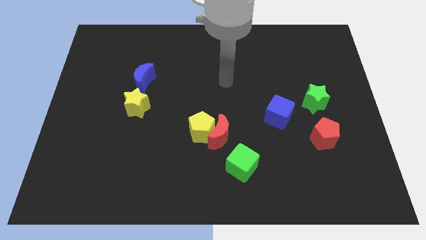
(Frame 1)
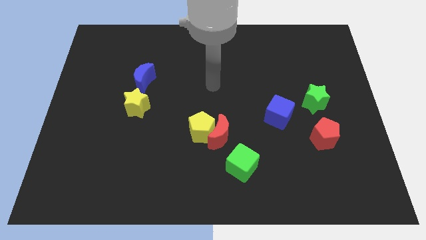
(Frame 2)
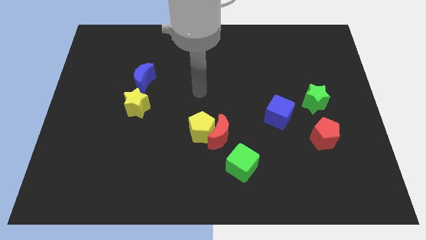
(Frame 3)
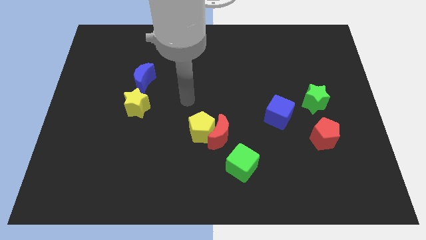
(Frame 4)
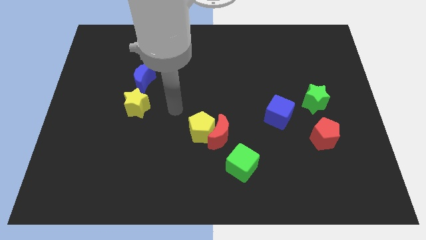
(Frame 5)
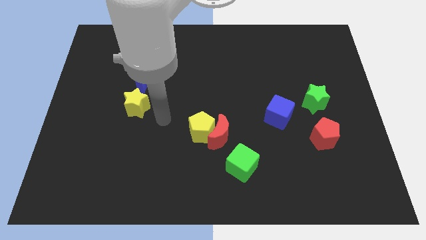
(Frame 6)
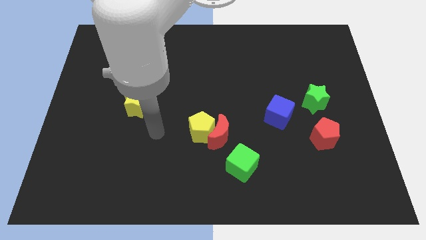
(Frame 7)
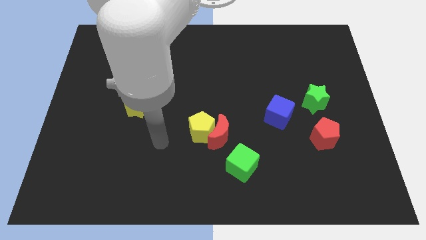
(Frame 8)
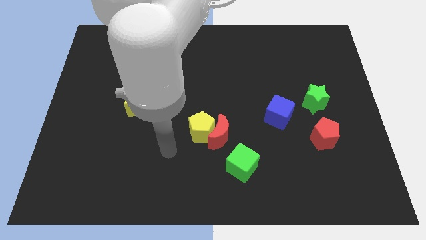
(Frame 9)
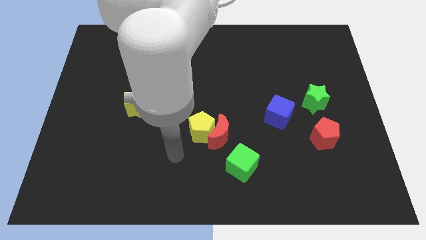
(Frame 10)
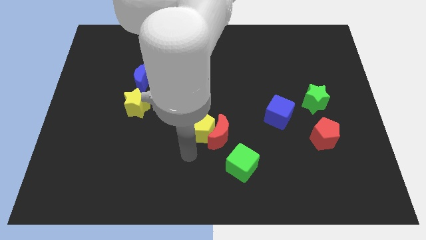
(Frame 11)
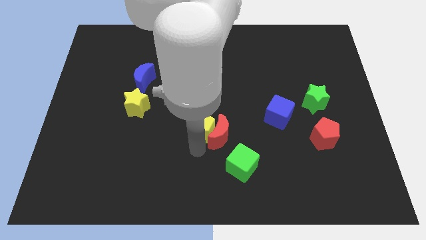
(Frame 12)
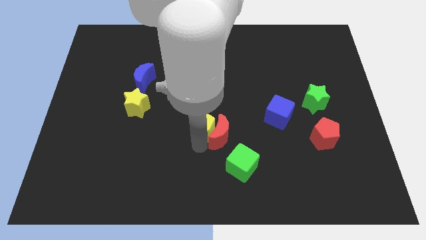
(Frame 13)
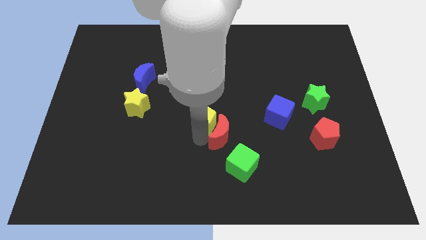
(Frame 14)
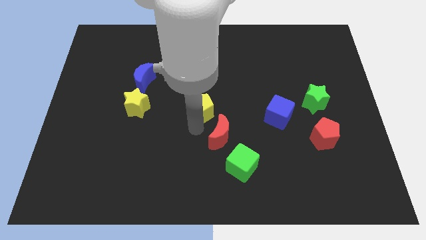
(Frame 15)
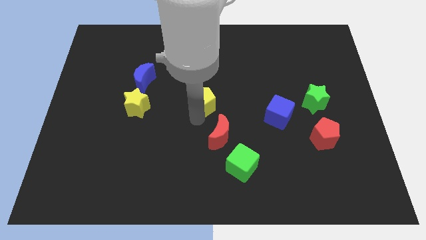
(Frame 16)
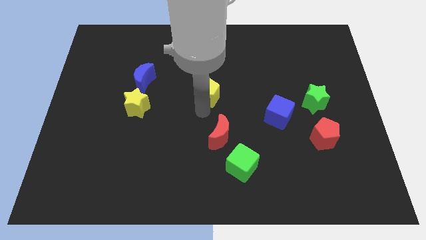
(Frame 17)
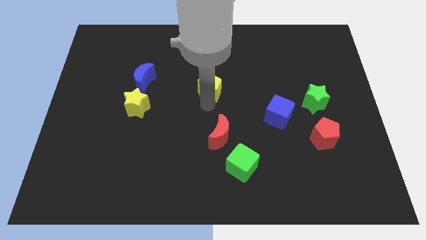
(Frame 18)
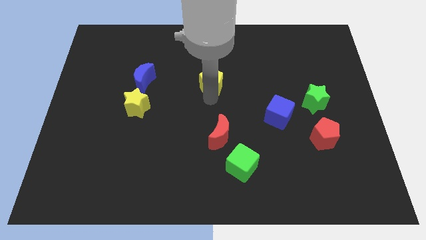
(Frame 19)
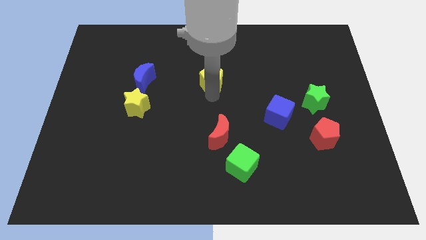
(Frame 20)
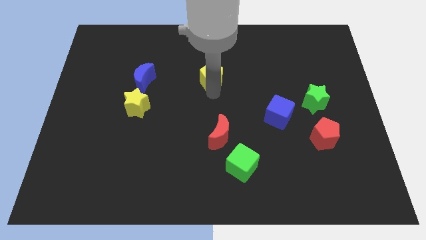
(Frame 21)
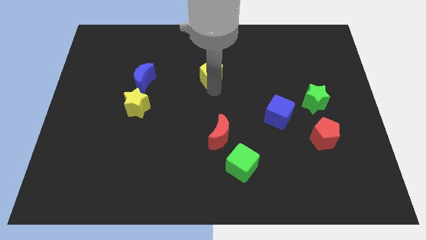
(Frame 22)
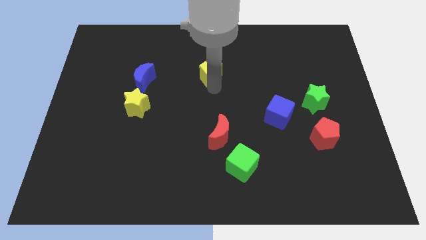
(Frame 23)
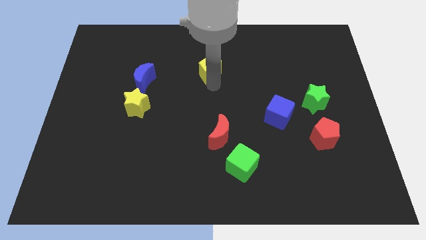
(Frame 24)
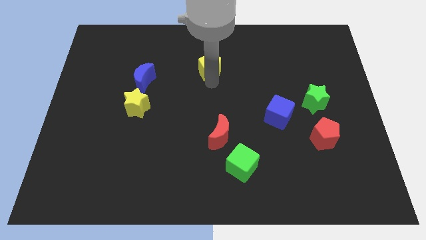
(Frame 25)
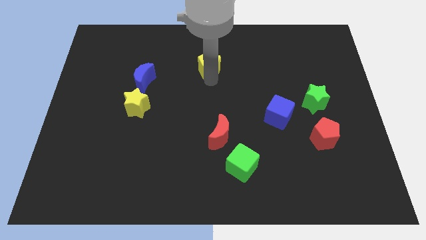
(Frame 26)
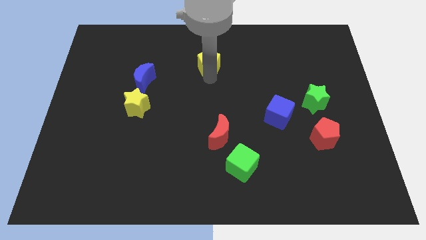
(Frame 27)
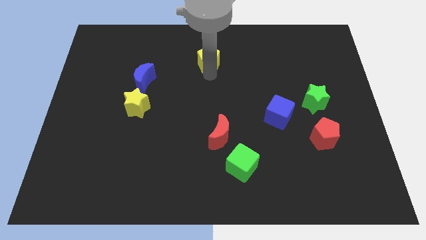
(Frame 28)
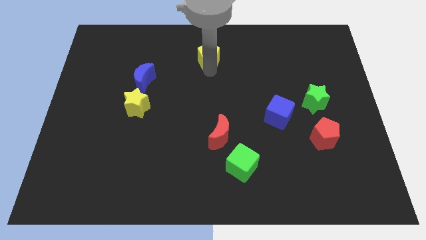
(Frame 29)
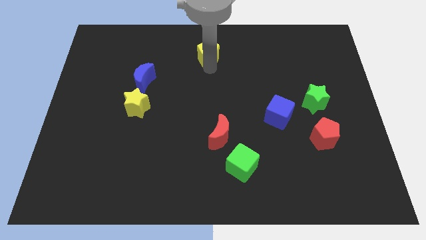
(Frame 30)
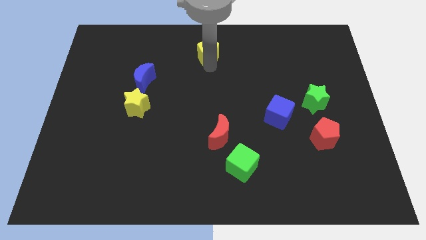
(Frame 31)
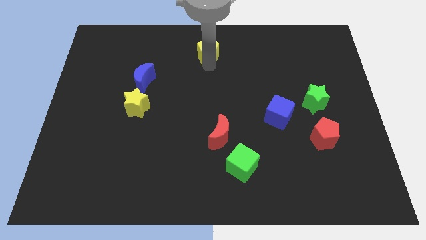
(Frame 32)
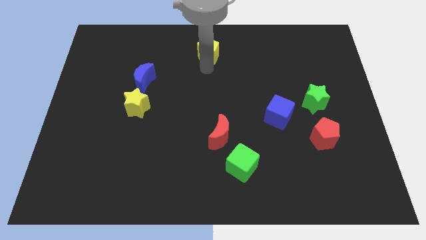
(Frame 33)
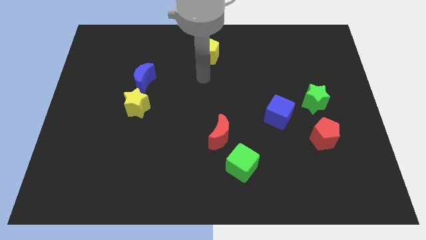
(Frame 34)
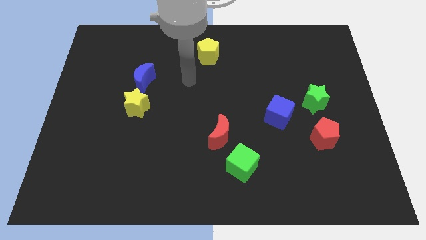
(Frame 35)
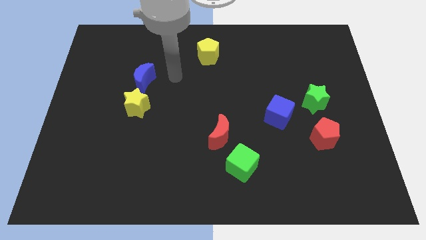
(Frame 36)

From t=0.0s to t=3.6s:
place the yellow pentagon vertically above the red crescent

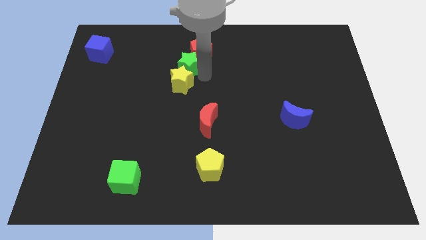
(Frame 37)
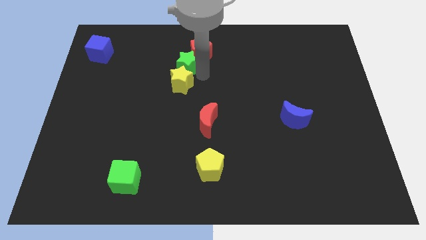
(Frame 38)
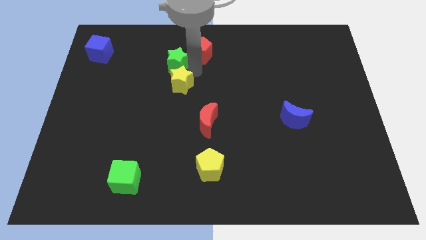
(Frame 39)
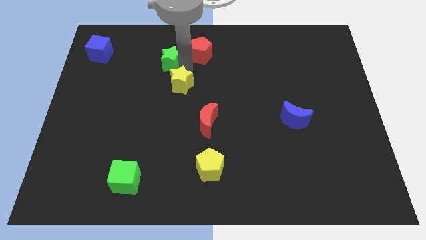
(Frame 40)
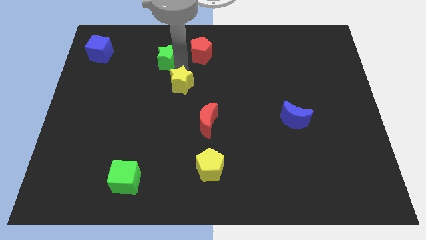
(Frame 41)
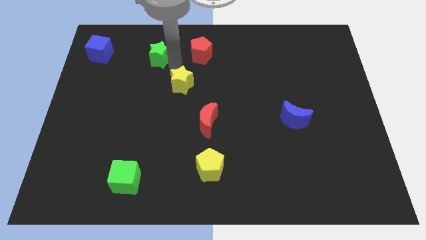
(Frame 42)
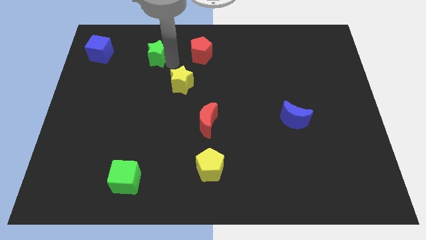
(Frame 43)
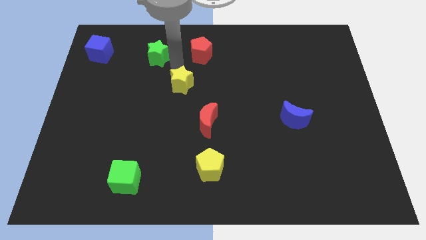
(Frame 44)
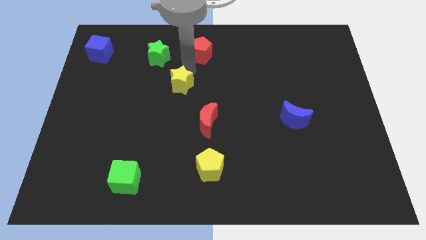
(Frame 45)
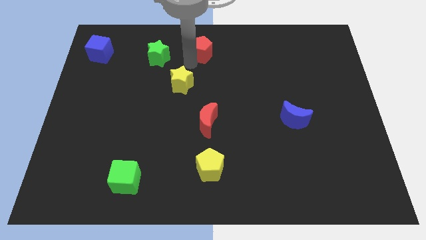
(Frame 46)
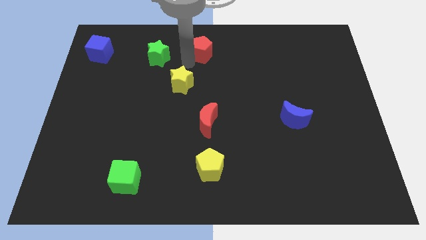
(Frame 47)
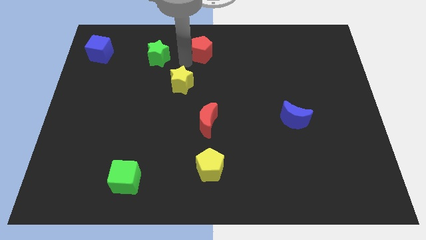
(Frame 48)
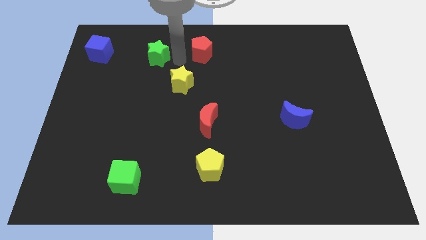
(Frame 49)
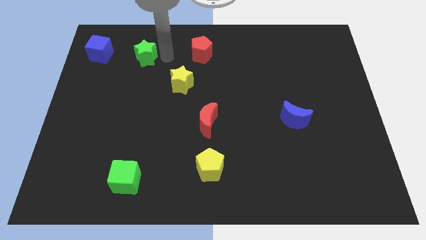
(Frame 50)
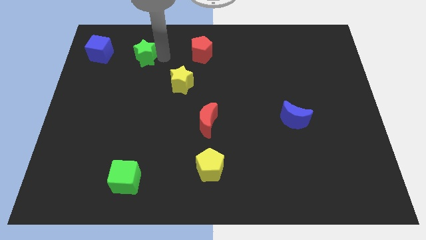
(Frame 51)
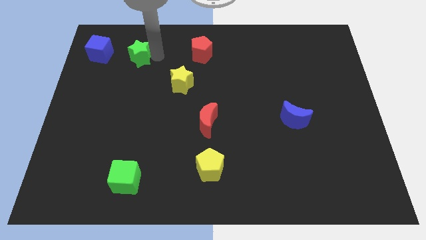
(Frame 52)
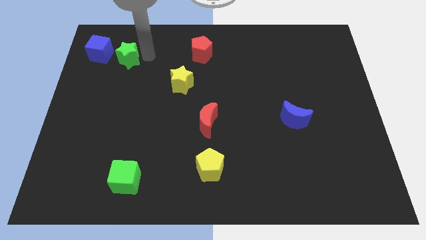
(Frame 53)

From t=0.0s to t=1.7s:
place green star right to the blue cube

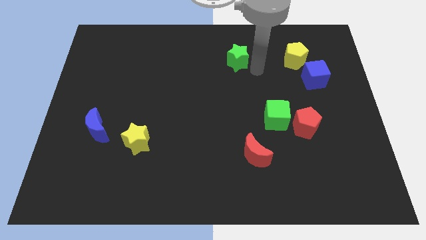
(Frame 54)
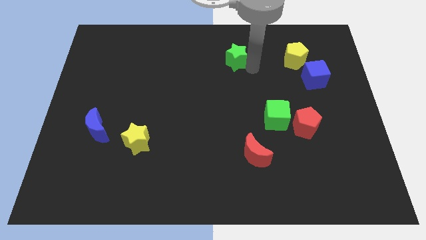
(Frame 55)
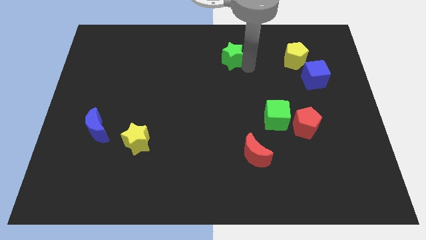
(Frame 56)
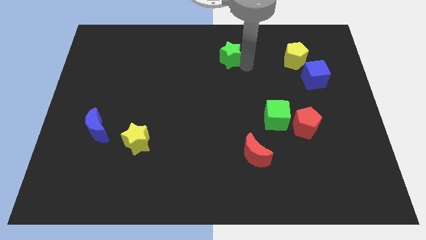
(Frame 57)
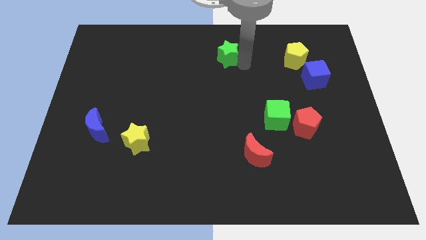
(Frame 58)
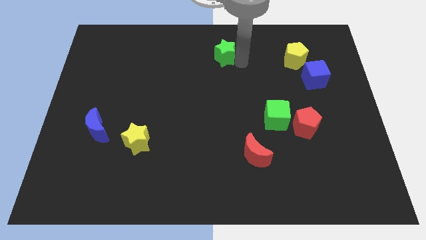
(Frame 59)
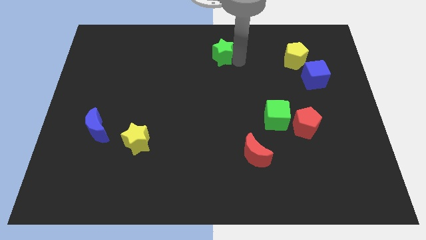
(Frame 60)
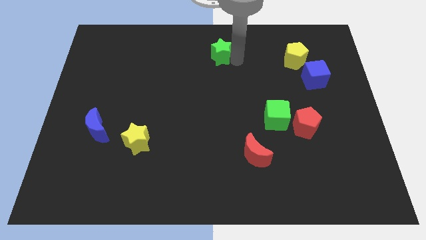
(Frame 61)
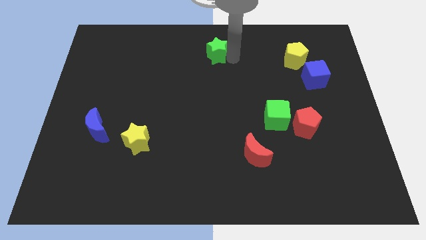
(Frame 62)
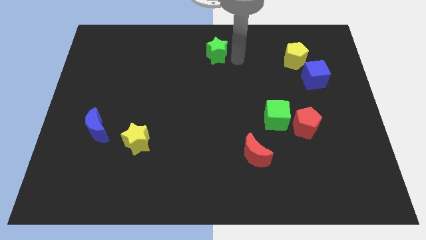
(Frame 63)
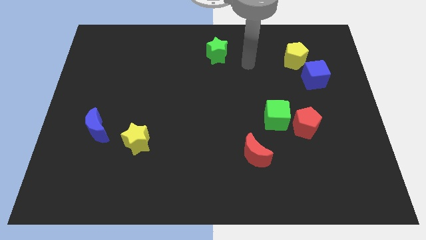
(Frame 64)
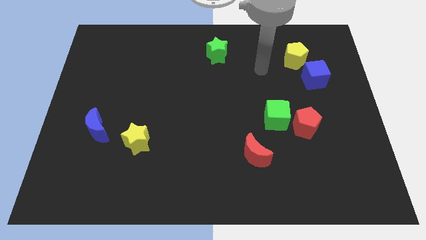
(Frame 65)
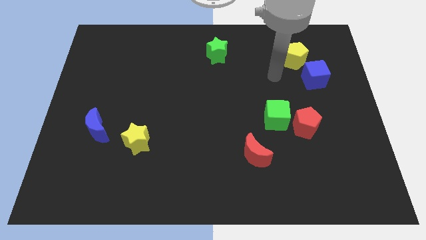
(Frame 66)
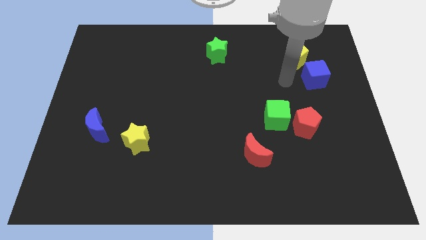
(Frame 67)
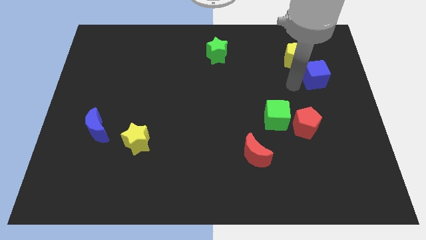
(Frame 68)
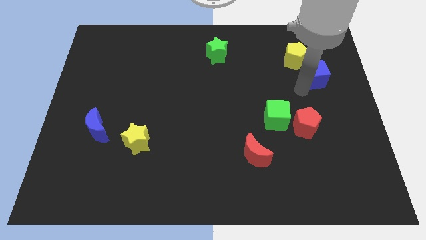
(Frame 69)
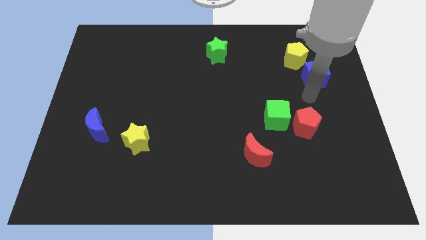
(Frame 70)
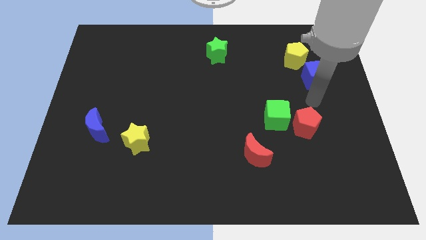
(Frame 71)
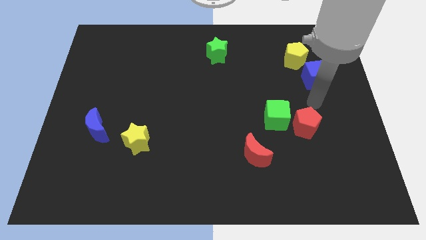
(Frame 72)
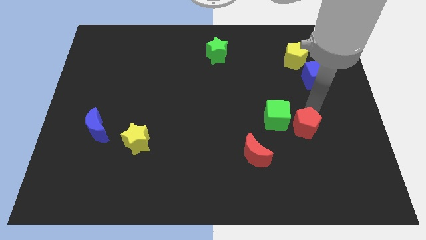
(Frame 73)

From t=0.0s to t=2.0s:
move green star towards the top middle center of the board

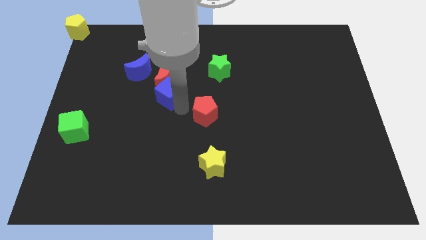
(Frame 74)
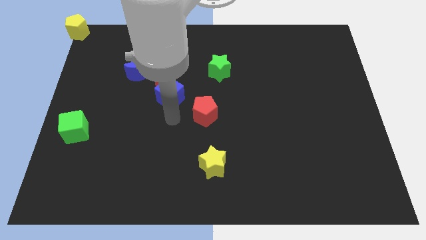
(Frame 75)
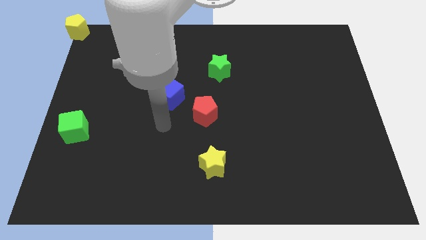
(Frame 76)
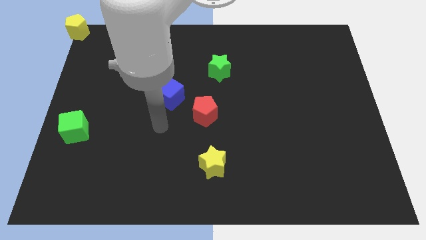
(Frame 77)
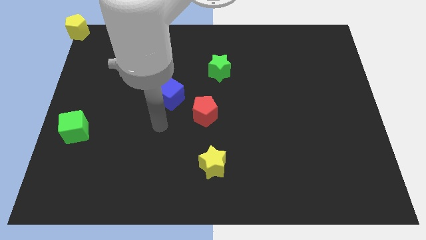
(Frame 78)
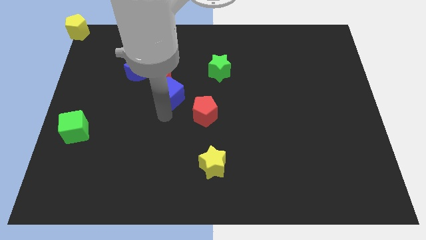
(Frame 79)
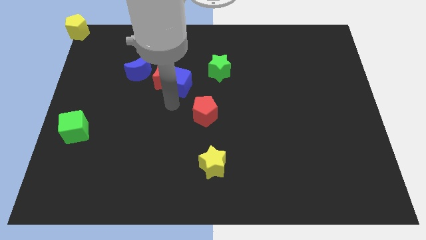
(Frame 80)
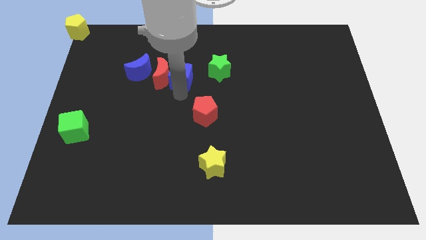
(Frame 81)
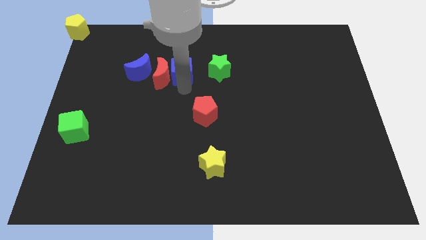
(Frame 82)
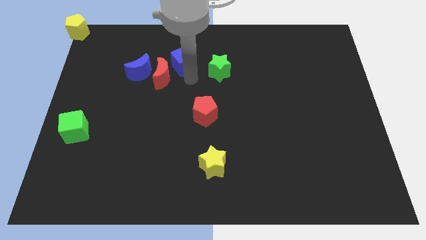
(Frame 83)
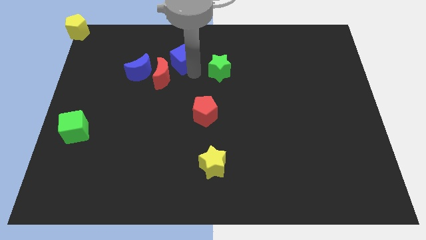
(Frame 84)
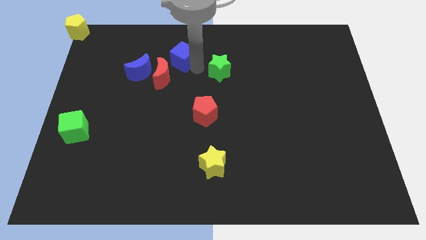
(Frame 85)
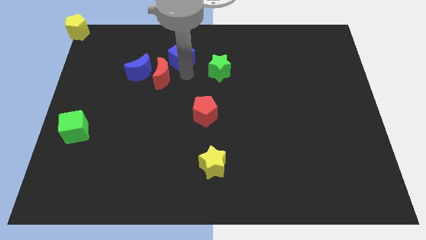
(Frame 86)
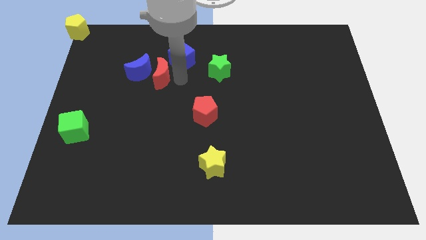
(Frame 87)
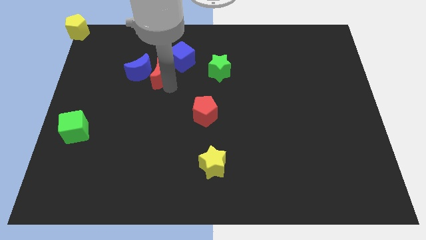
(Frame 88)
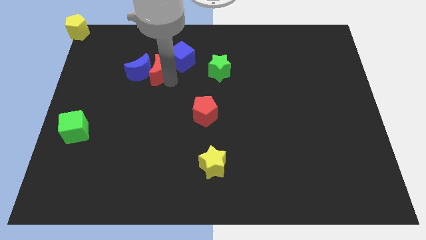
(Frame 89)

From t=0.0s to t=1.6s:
place the blue cube left to the green star
